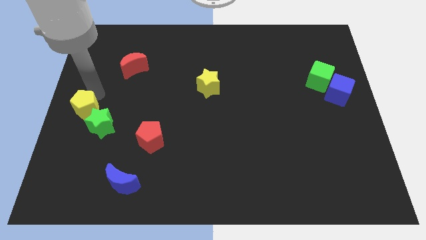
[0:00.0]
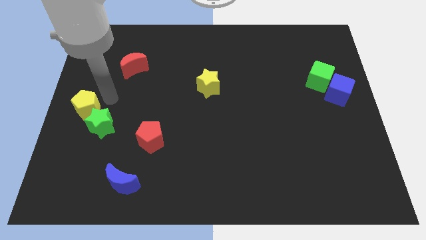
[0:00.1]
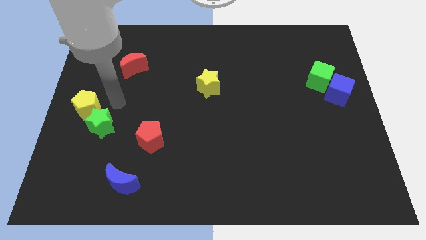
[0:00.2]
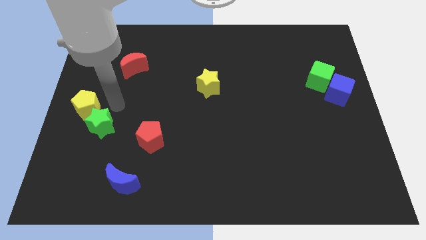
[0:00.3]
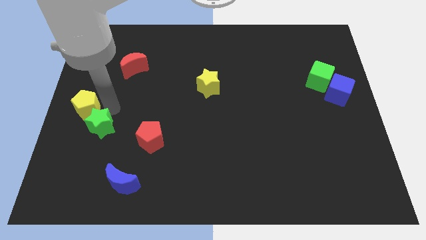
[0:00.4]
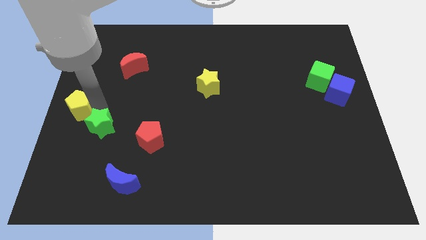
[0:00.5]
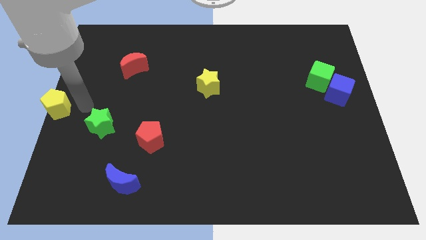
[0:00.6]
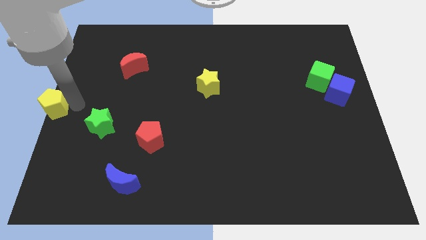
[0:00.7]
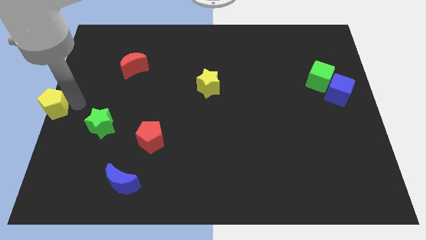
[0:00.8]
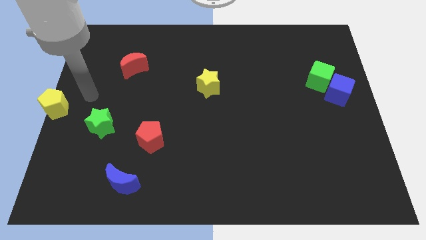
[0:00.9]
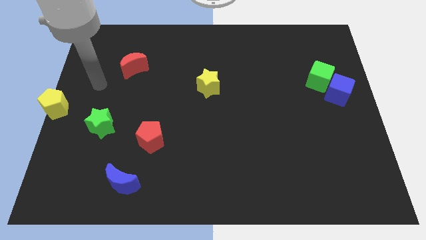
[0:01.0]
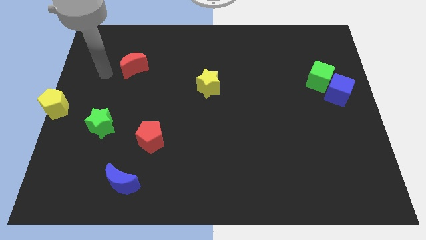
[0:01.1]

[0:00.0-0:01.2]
push the yellow object to the left center

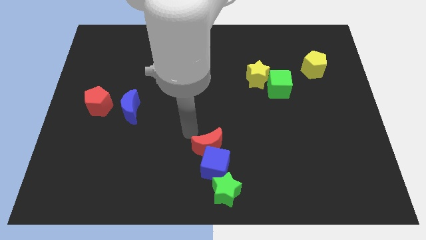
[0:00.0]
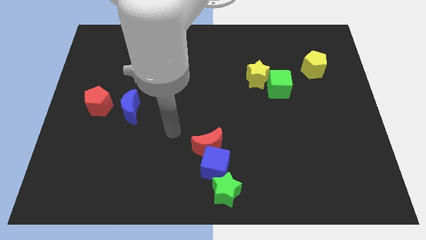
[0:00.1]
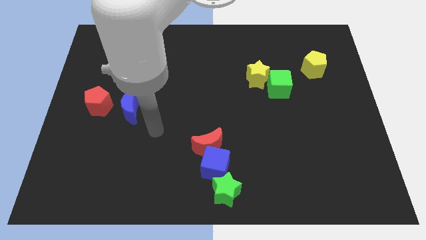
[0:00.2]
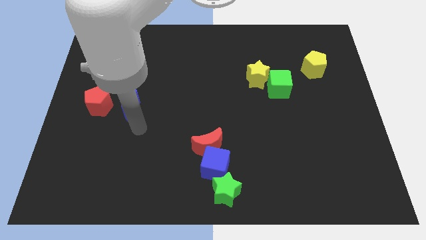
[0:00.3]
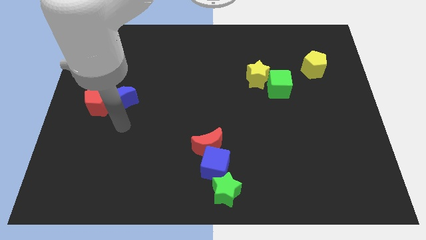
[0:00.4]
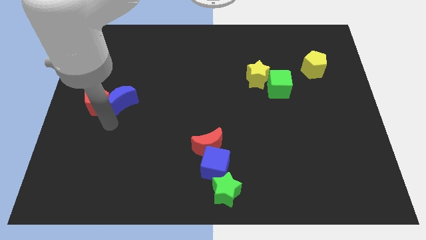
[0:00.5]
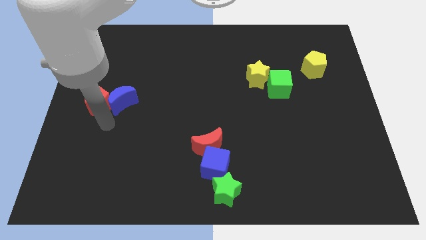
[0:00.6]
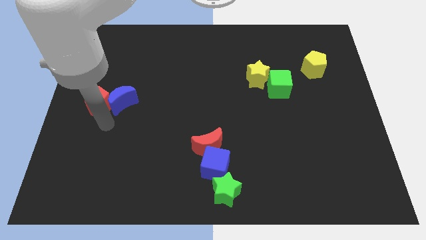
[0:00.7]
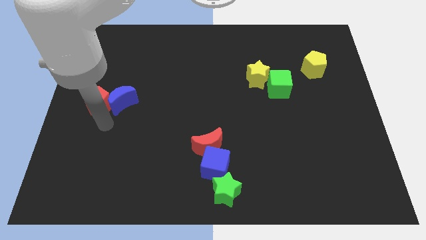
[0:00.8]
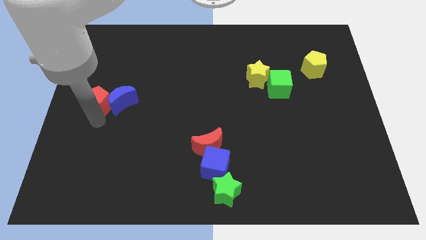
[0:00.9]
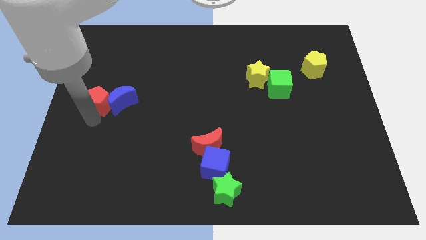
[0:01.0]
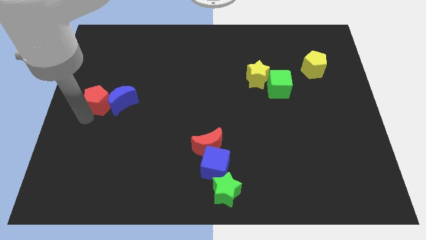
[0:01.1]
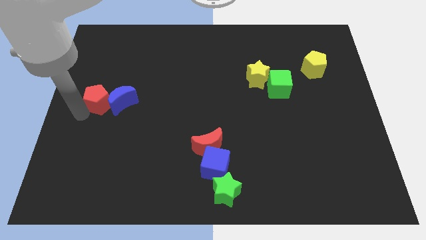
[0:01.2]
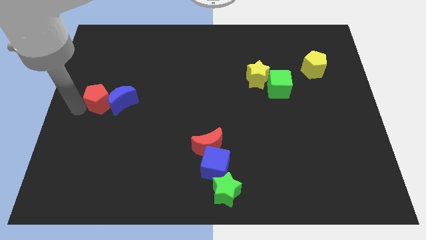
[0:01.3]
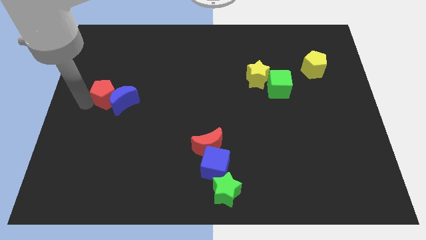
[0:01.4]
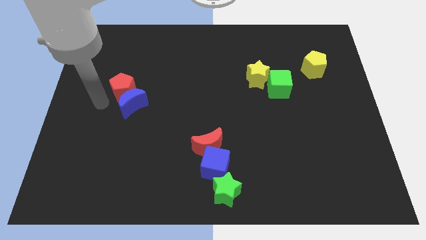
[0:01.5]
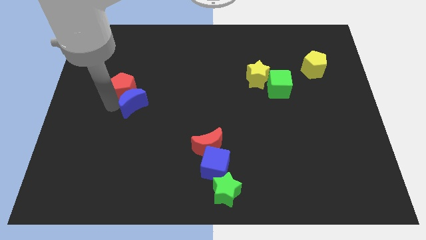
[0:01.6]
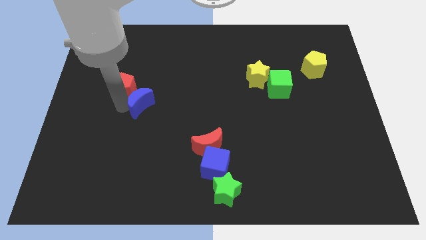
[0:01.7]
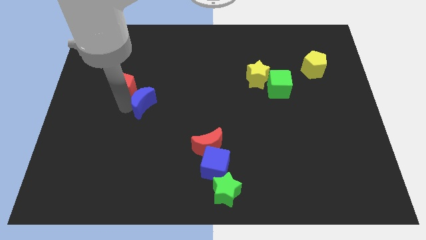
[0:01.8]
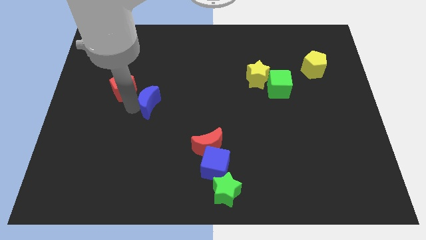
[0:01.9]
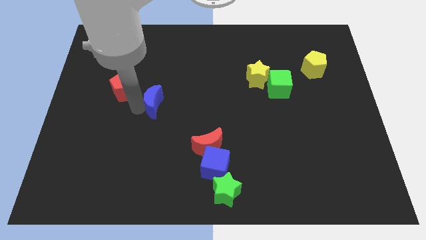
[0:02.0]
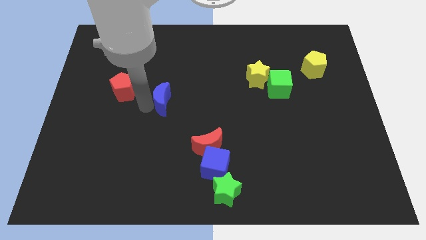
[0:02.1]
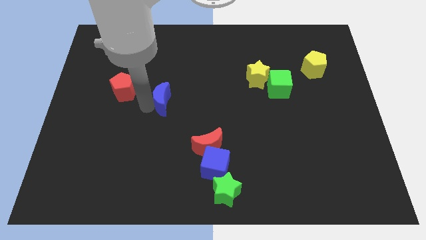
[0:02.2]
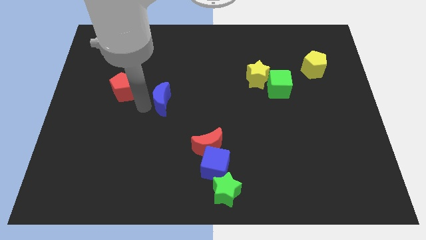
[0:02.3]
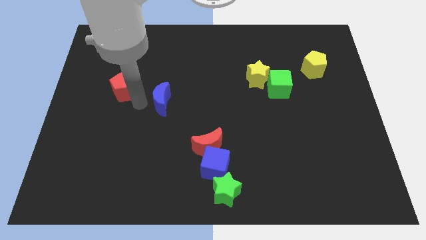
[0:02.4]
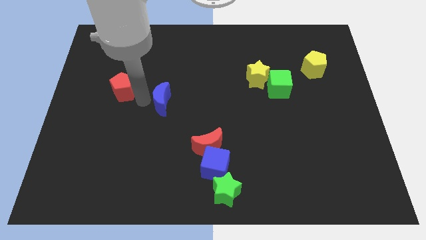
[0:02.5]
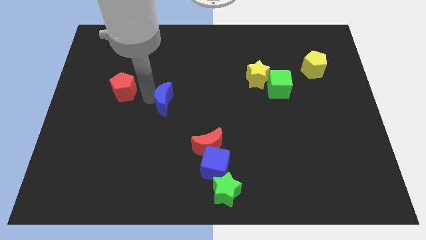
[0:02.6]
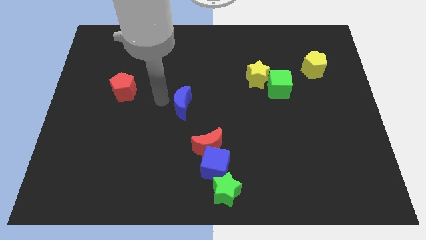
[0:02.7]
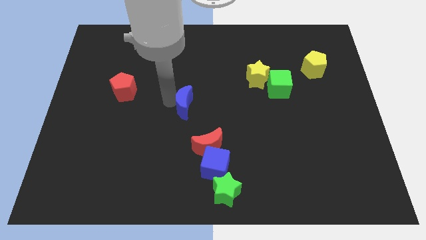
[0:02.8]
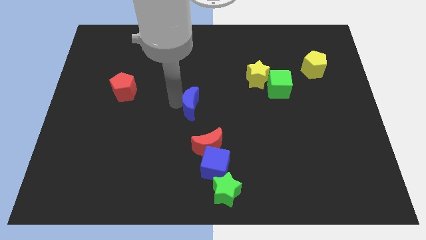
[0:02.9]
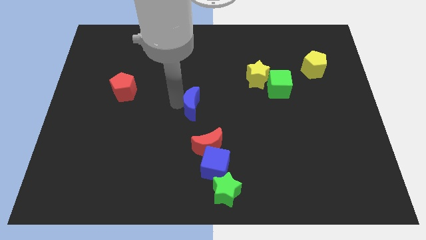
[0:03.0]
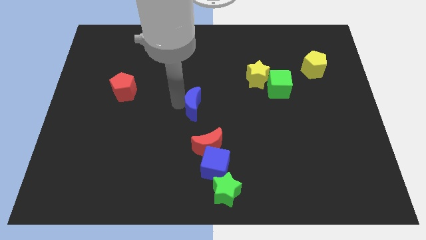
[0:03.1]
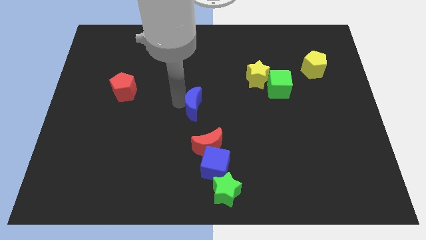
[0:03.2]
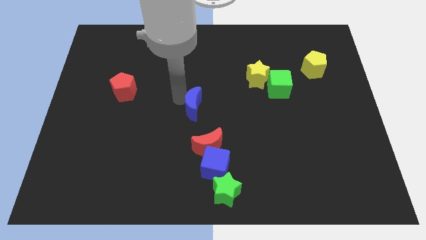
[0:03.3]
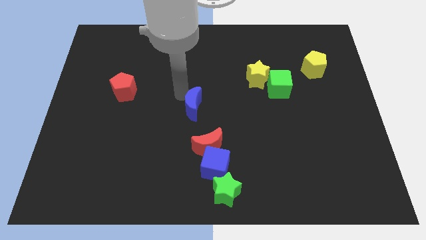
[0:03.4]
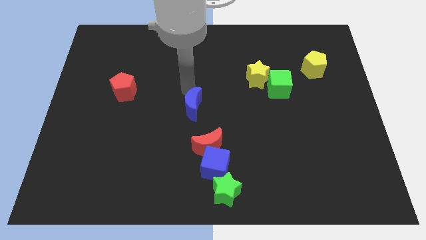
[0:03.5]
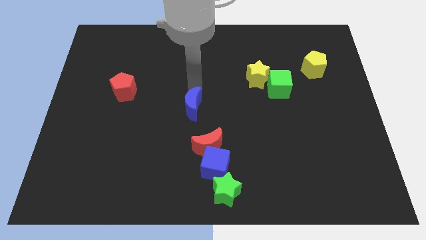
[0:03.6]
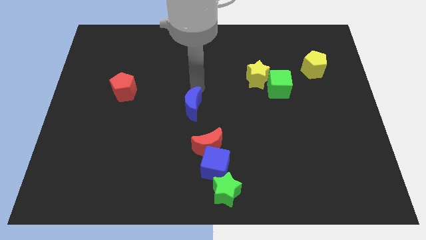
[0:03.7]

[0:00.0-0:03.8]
move the blue moon away from the red pentagon

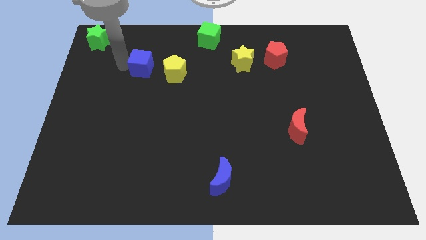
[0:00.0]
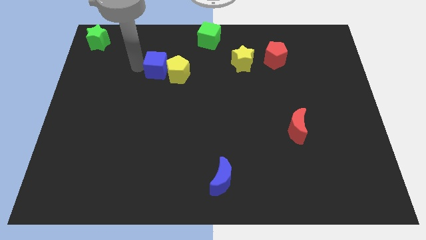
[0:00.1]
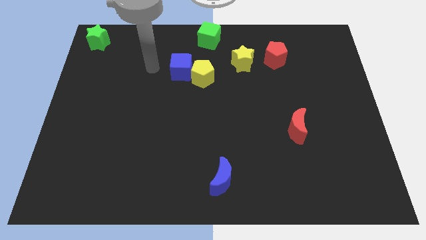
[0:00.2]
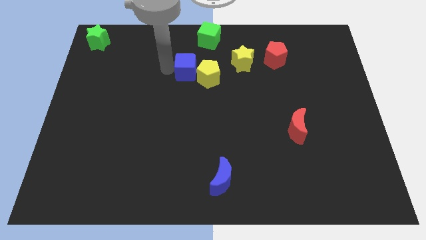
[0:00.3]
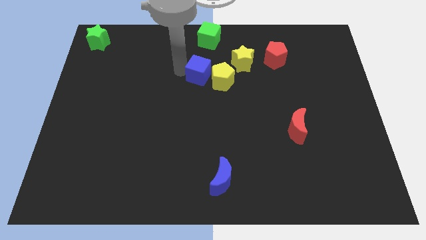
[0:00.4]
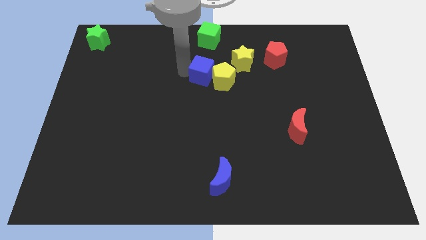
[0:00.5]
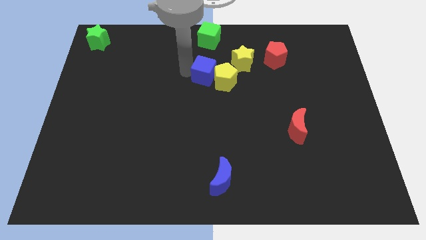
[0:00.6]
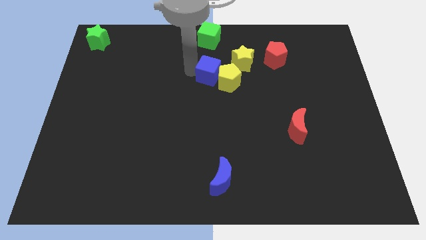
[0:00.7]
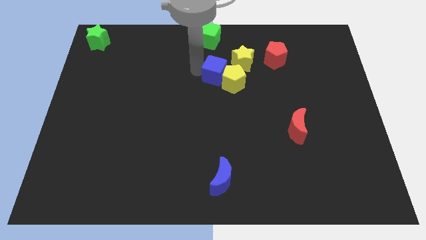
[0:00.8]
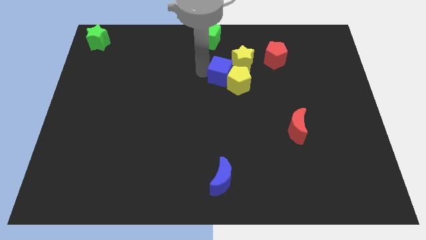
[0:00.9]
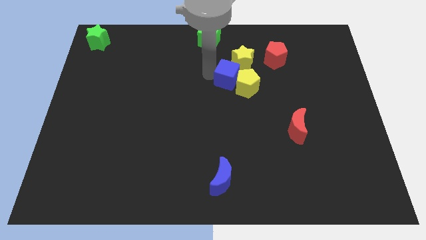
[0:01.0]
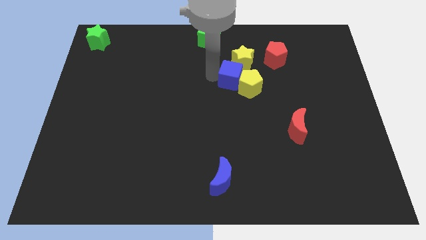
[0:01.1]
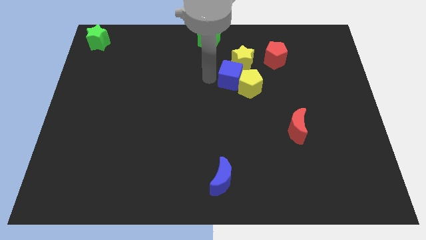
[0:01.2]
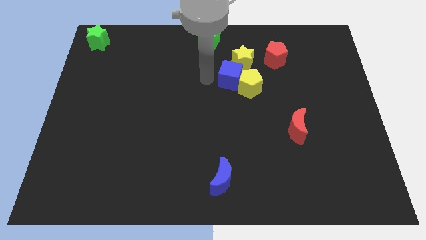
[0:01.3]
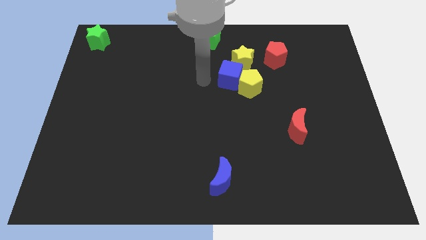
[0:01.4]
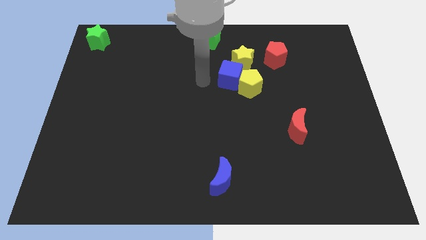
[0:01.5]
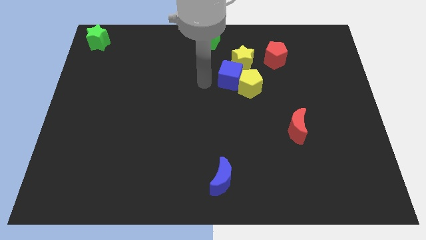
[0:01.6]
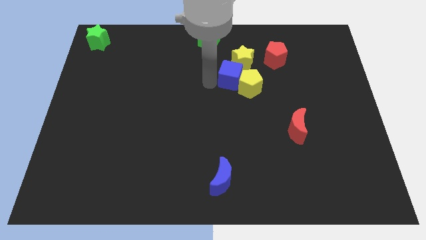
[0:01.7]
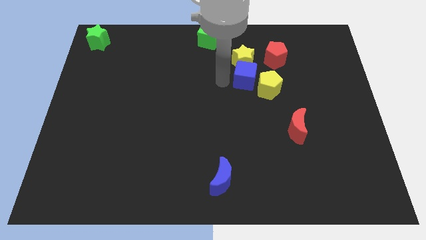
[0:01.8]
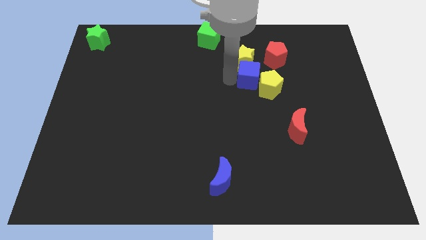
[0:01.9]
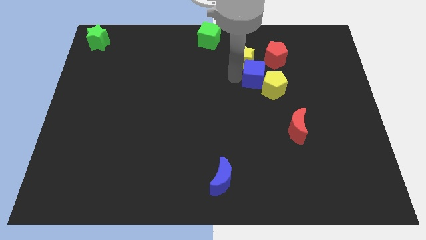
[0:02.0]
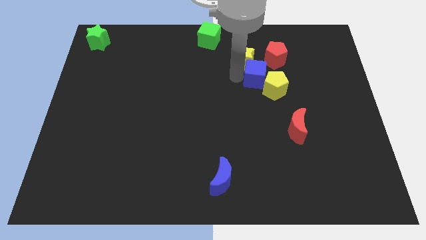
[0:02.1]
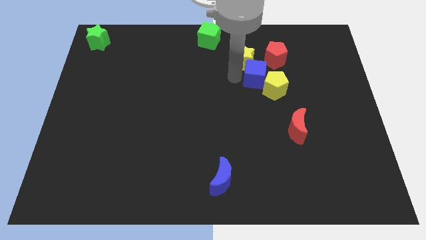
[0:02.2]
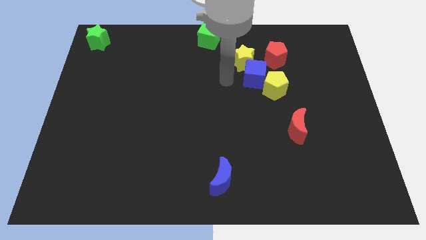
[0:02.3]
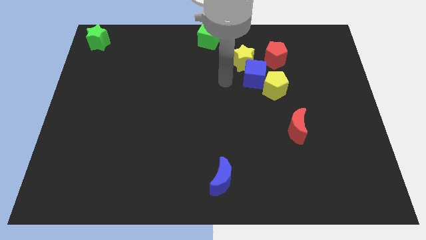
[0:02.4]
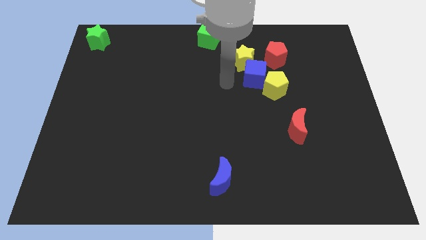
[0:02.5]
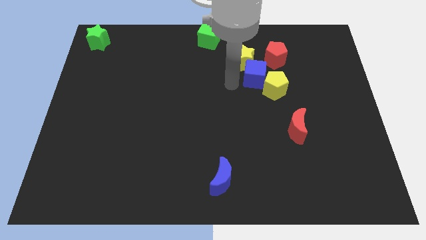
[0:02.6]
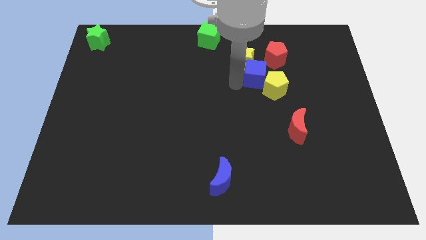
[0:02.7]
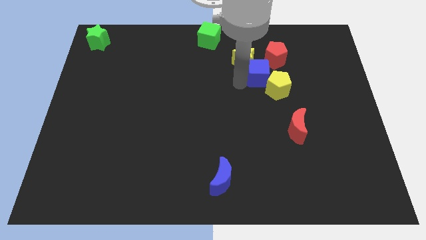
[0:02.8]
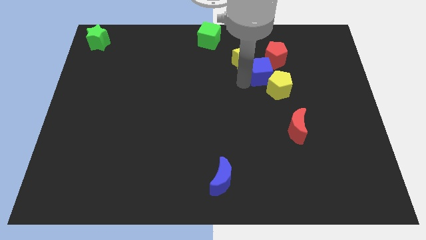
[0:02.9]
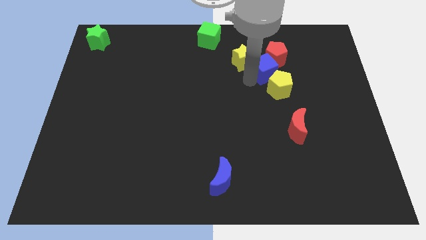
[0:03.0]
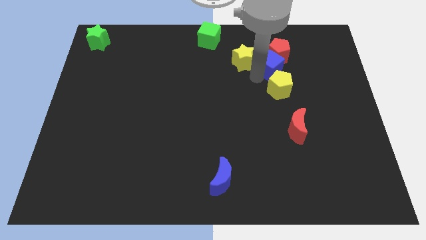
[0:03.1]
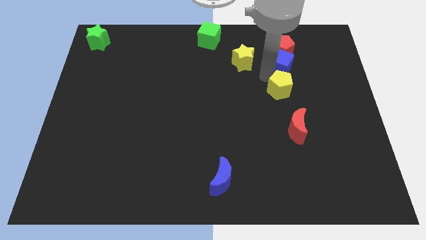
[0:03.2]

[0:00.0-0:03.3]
move the blue cube in between the yellow star and yellow pentagon

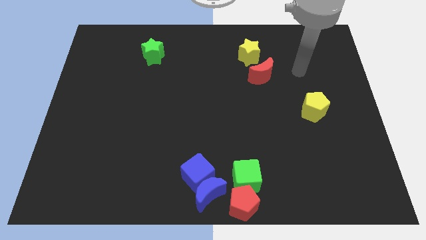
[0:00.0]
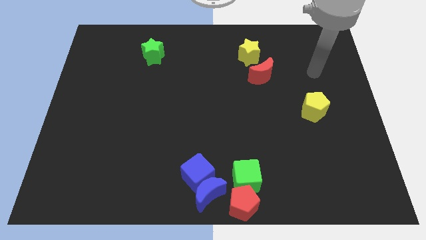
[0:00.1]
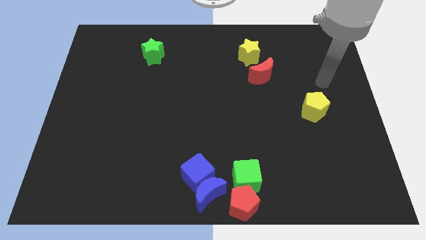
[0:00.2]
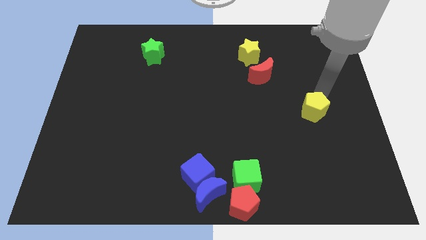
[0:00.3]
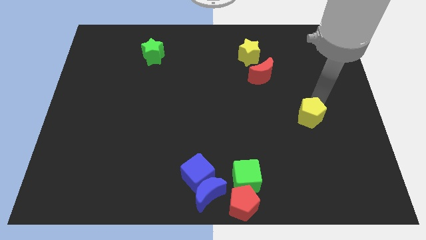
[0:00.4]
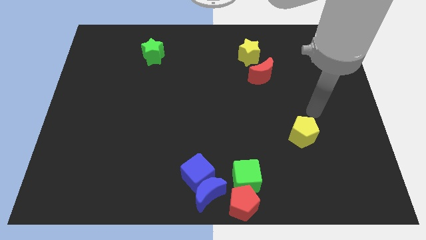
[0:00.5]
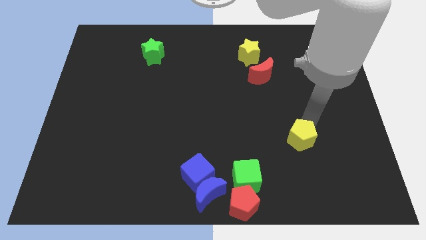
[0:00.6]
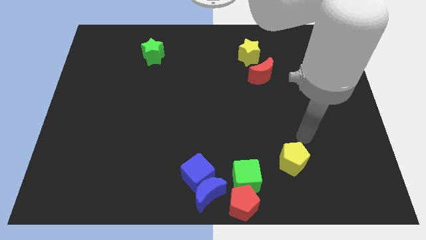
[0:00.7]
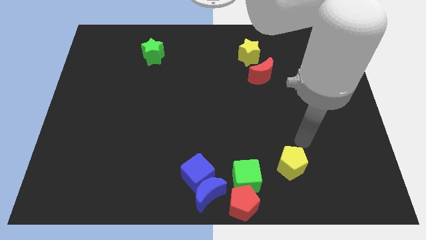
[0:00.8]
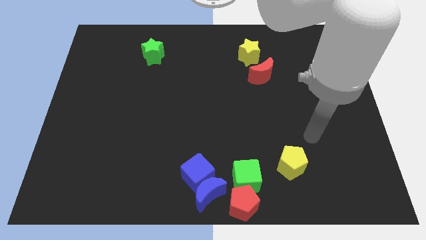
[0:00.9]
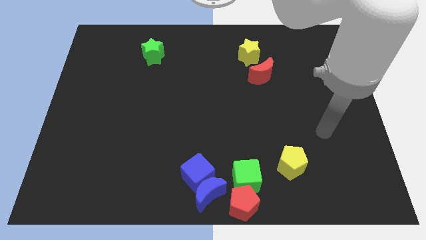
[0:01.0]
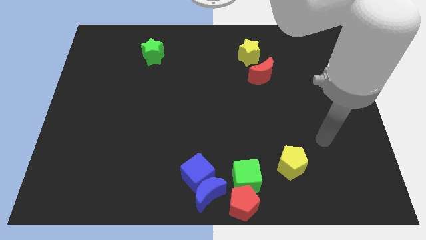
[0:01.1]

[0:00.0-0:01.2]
push the yellow pentagon to the bottom of the board
